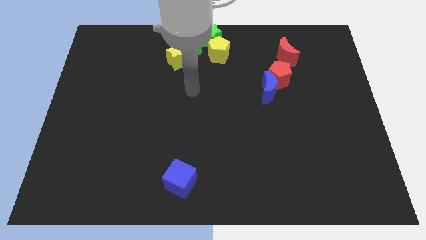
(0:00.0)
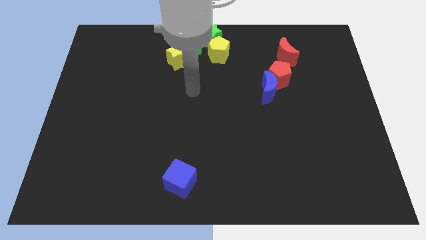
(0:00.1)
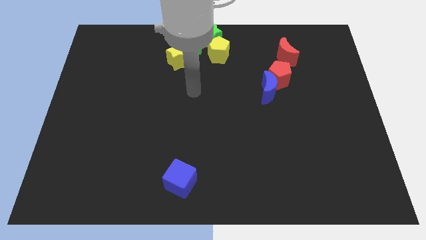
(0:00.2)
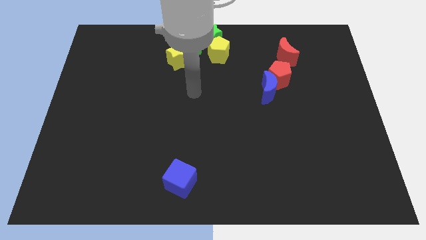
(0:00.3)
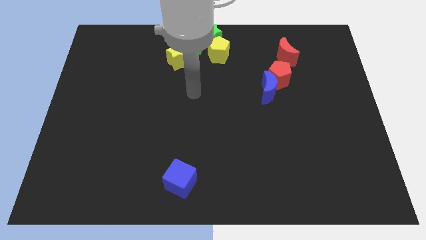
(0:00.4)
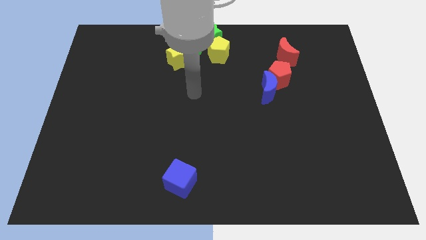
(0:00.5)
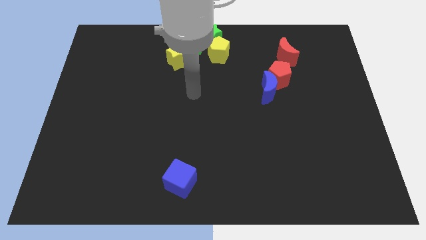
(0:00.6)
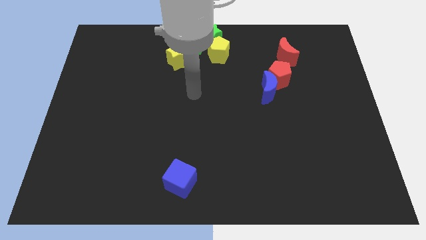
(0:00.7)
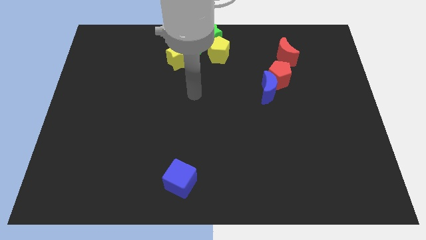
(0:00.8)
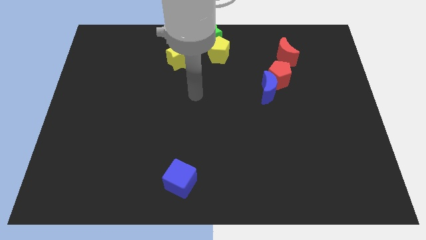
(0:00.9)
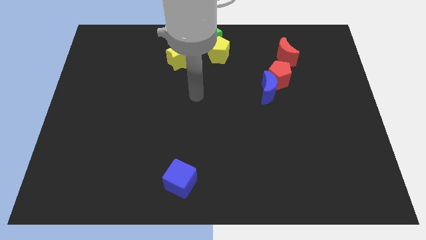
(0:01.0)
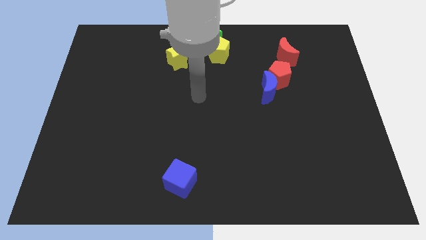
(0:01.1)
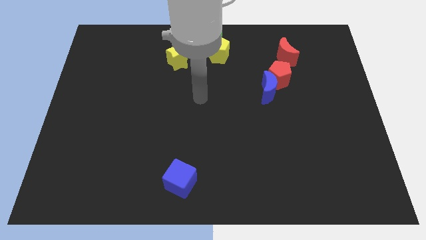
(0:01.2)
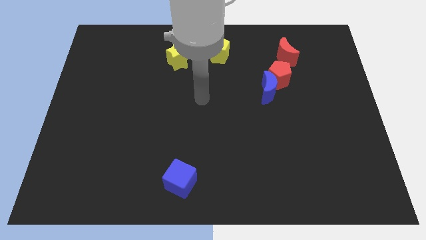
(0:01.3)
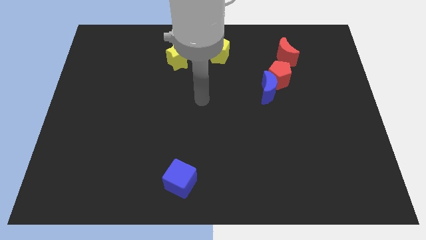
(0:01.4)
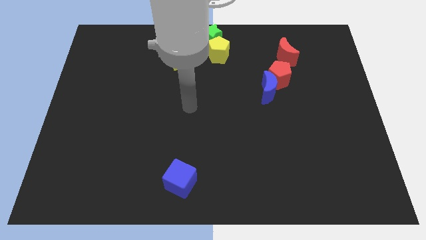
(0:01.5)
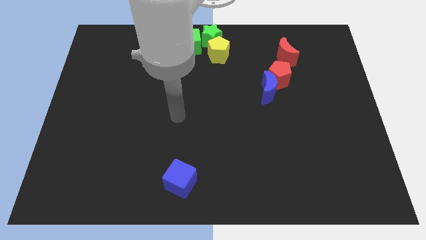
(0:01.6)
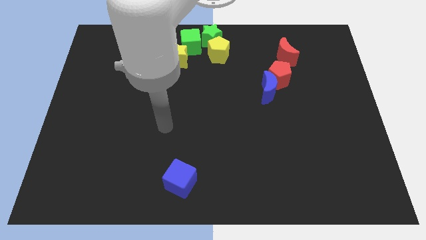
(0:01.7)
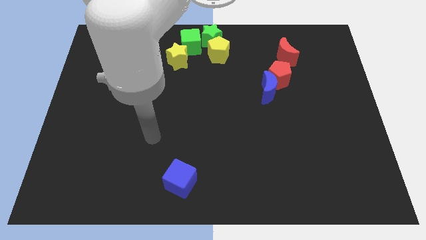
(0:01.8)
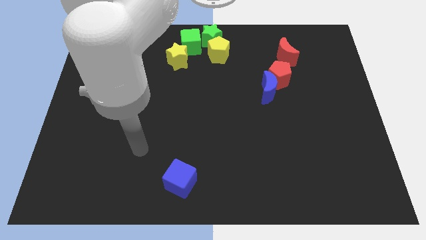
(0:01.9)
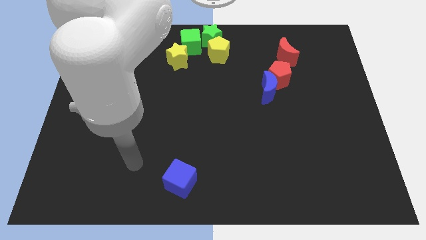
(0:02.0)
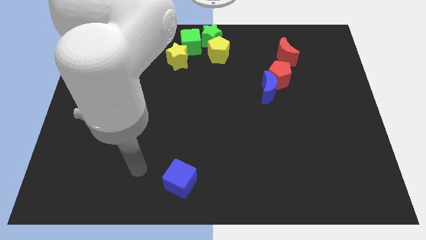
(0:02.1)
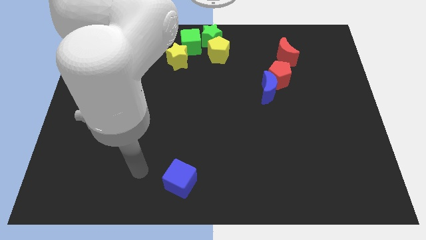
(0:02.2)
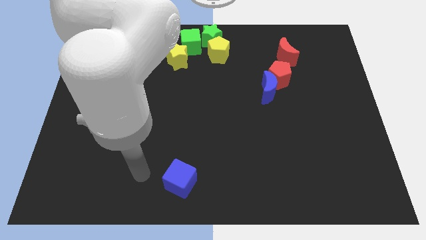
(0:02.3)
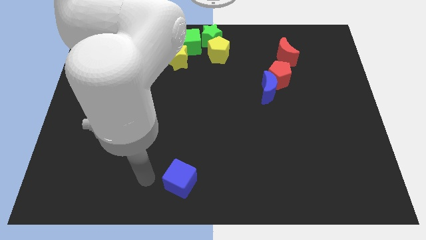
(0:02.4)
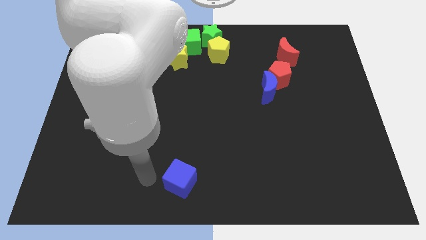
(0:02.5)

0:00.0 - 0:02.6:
point your arm at the left of the blue cube

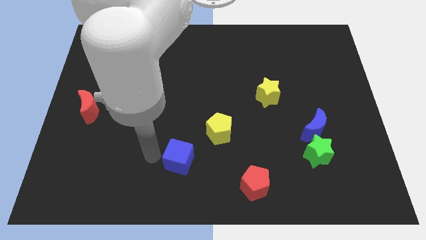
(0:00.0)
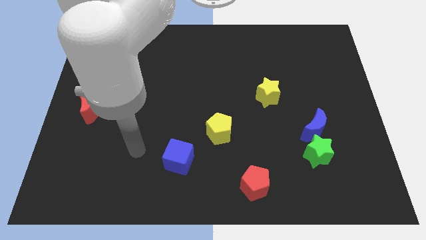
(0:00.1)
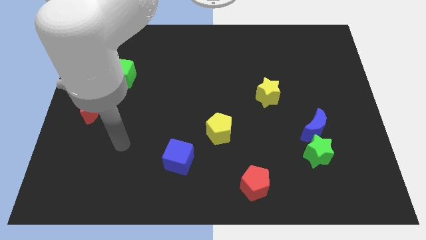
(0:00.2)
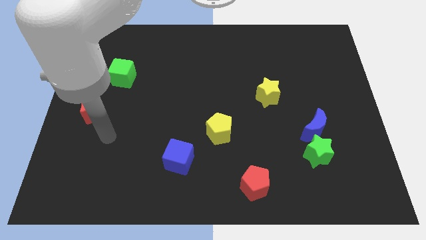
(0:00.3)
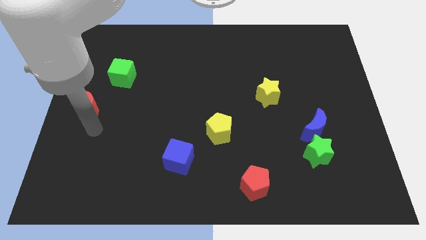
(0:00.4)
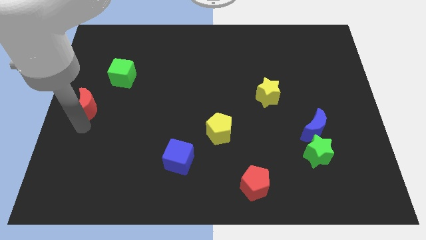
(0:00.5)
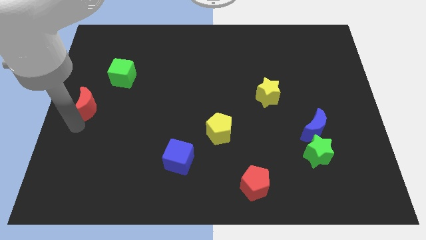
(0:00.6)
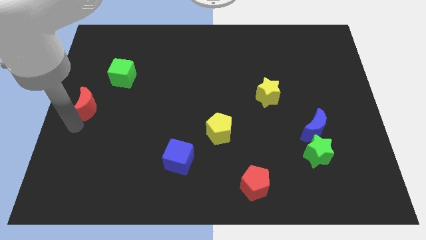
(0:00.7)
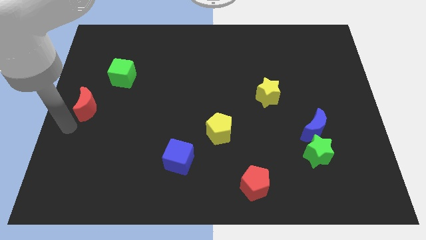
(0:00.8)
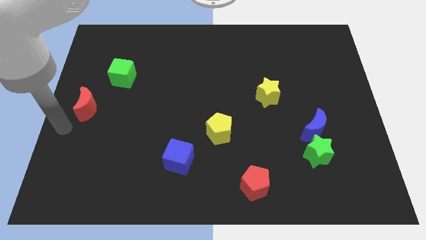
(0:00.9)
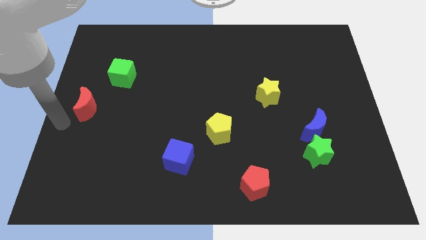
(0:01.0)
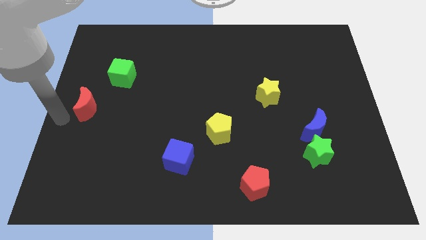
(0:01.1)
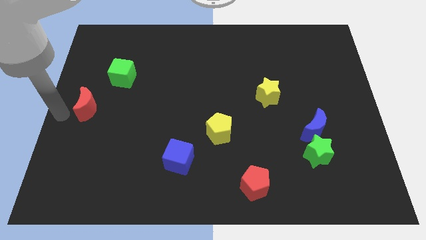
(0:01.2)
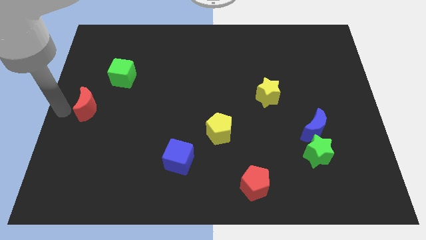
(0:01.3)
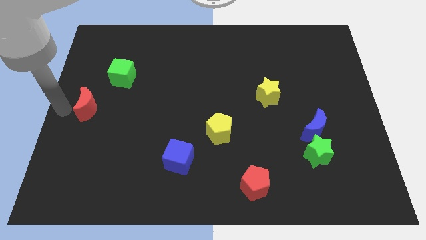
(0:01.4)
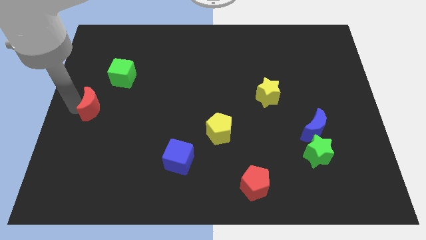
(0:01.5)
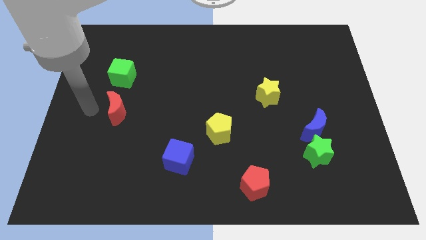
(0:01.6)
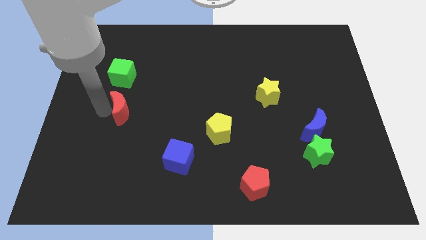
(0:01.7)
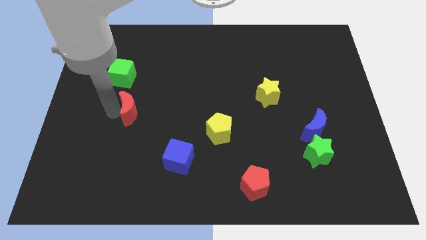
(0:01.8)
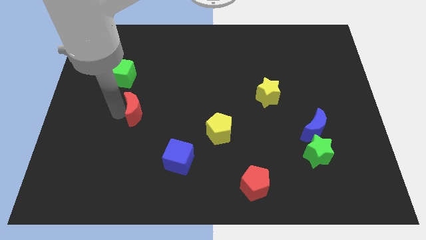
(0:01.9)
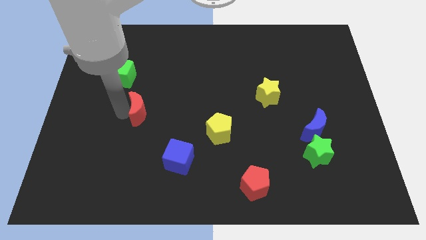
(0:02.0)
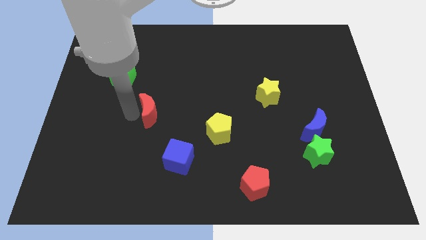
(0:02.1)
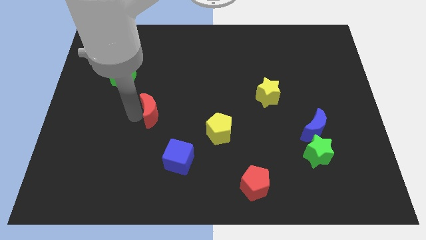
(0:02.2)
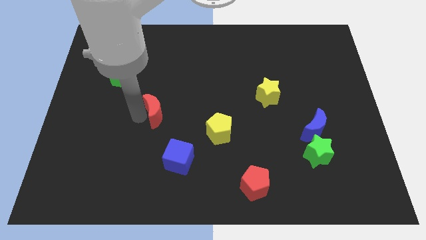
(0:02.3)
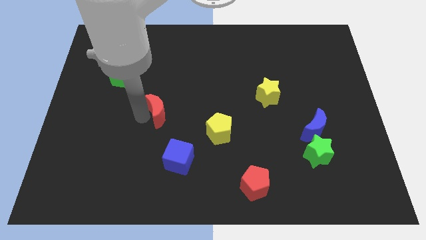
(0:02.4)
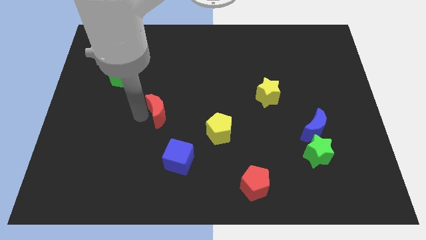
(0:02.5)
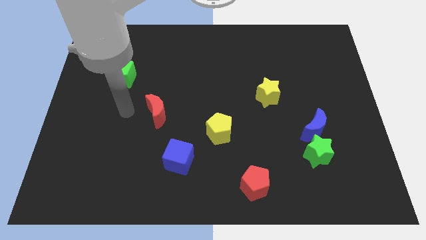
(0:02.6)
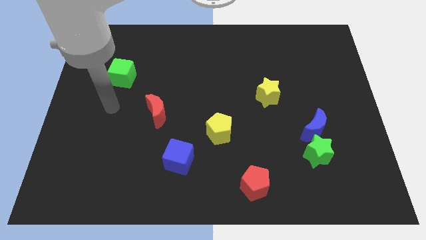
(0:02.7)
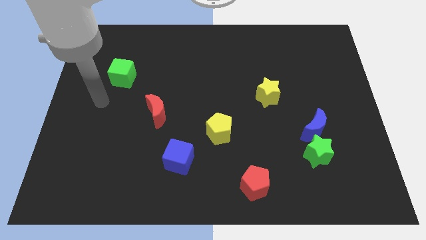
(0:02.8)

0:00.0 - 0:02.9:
place red crescent between blue and green blocks diagonally

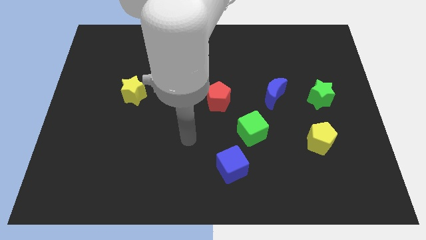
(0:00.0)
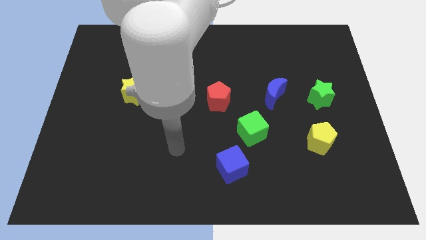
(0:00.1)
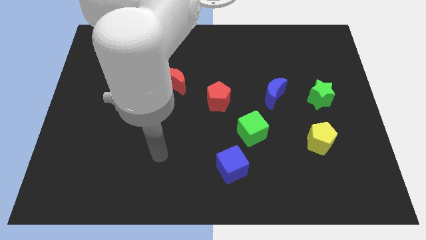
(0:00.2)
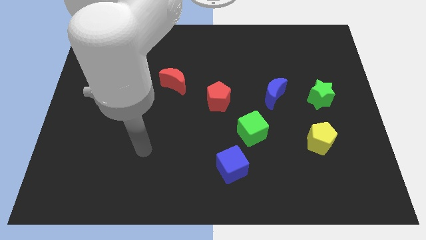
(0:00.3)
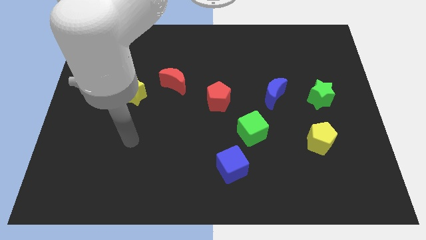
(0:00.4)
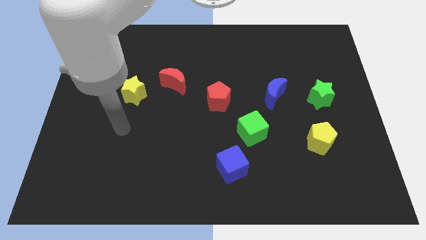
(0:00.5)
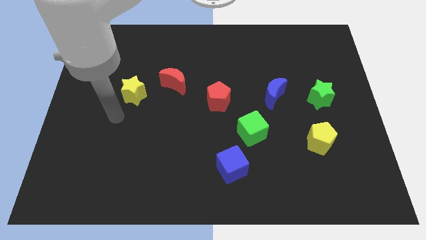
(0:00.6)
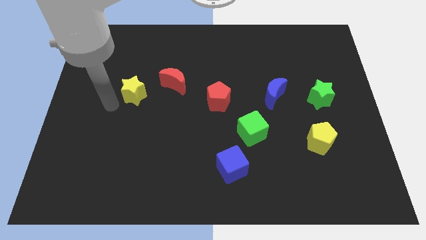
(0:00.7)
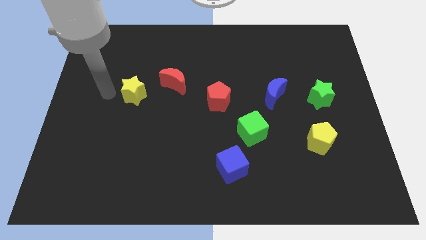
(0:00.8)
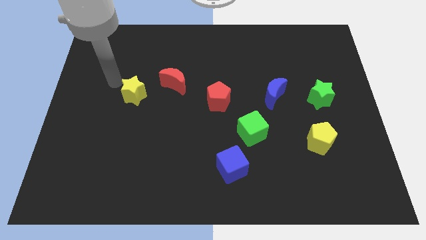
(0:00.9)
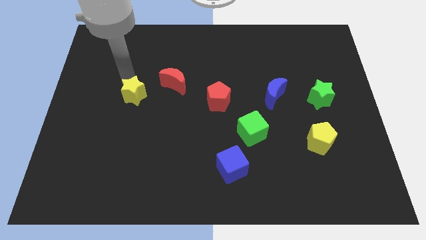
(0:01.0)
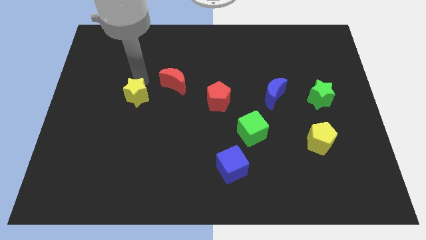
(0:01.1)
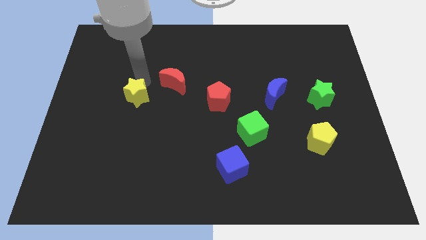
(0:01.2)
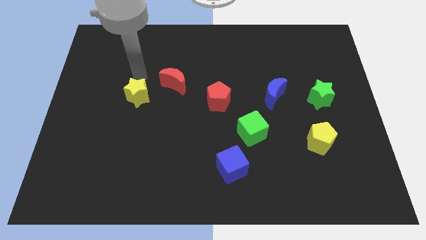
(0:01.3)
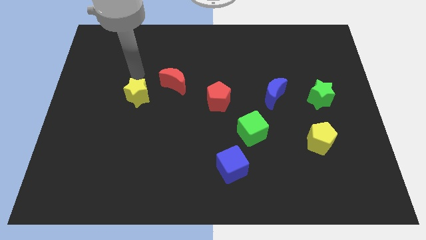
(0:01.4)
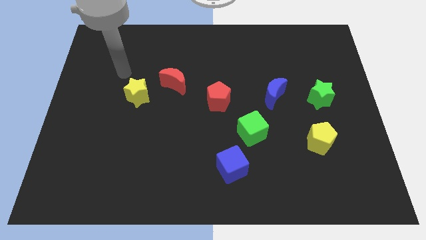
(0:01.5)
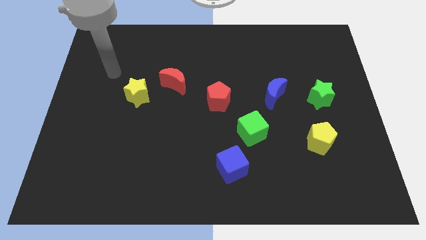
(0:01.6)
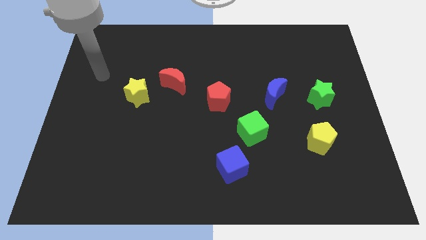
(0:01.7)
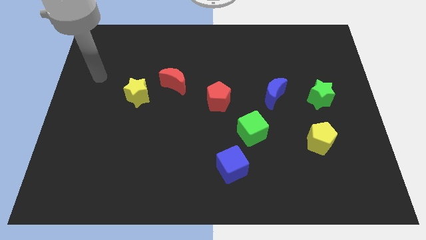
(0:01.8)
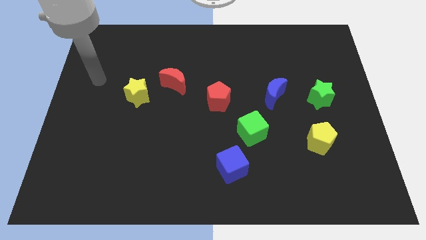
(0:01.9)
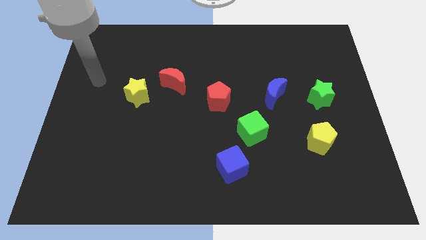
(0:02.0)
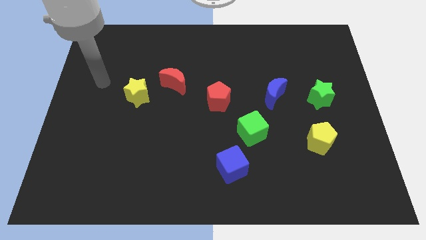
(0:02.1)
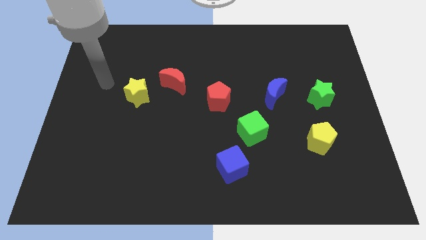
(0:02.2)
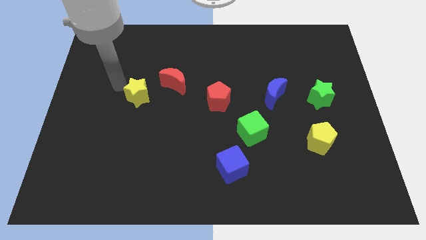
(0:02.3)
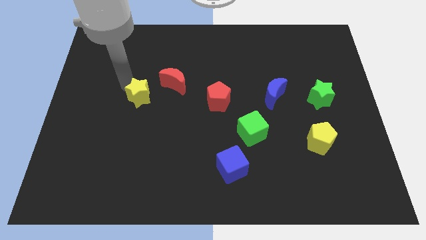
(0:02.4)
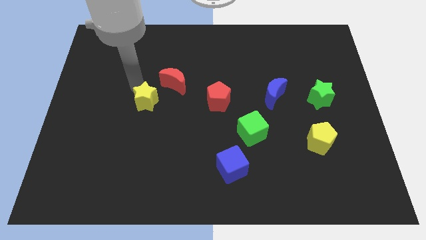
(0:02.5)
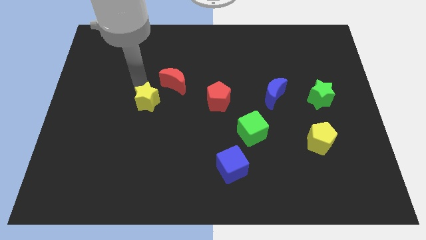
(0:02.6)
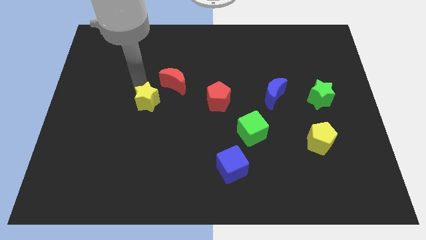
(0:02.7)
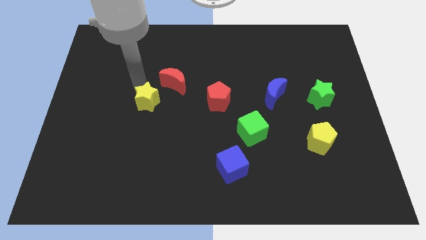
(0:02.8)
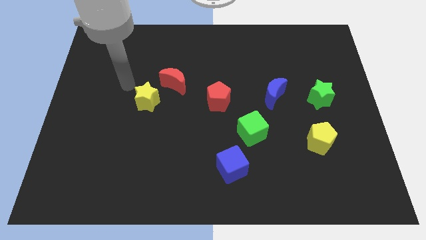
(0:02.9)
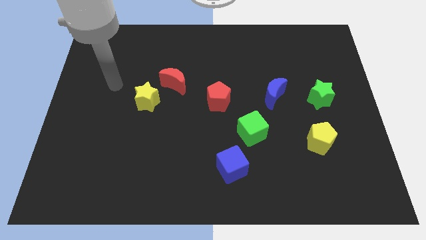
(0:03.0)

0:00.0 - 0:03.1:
slide yellow star to the bottom left of red moon

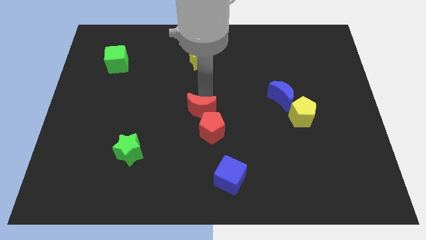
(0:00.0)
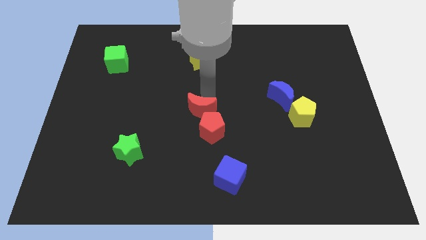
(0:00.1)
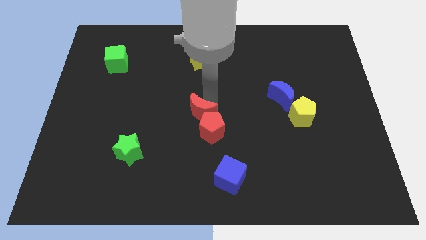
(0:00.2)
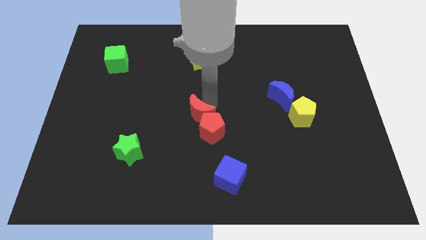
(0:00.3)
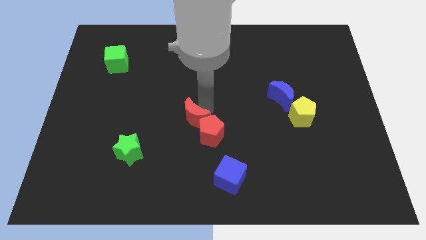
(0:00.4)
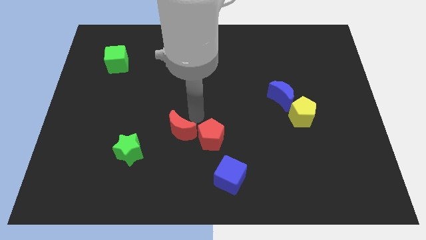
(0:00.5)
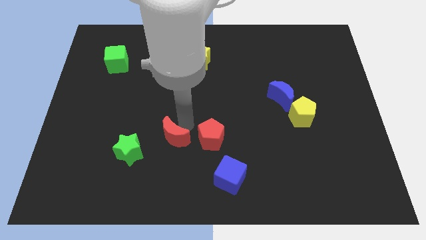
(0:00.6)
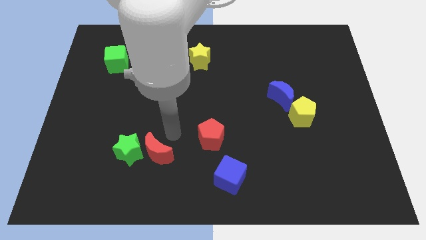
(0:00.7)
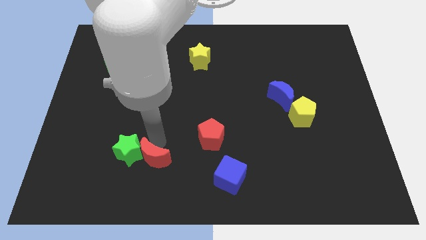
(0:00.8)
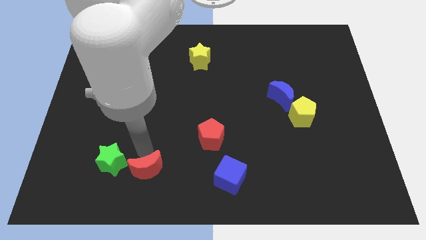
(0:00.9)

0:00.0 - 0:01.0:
place red moon to the right of green star
